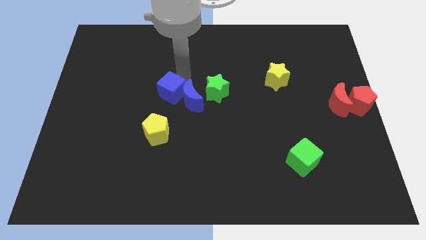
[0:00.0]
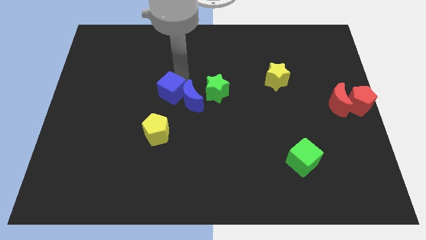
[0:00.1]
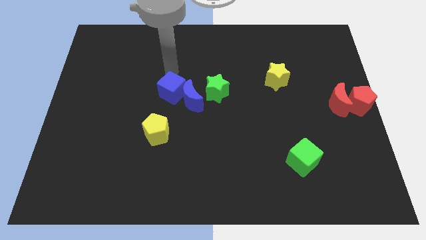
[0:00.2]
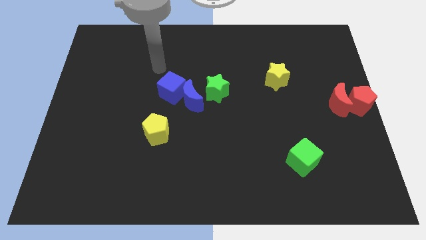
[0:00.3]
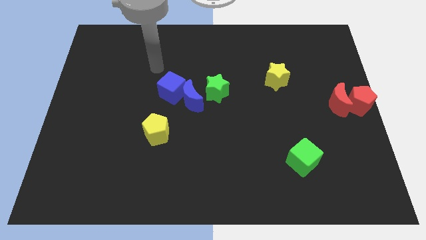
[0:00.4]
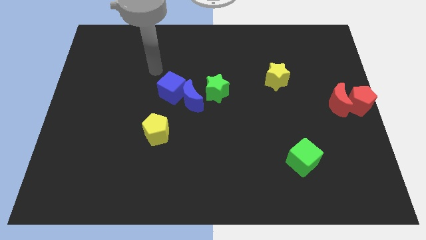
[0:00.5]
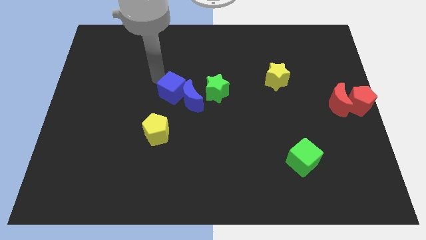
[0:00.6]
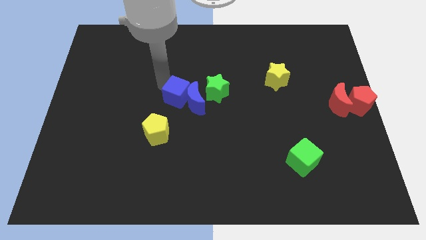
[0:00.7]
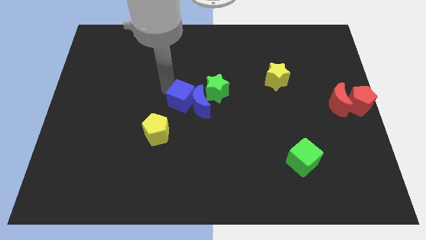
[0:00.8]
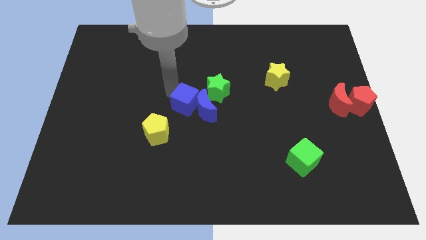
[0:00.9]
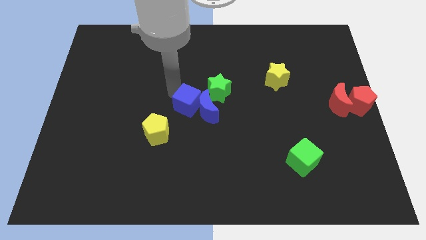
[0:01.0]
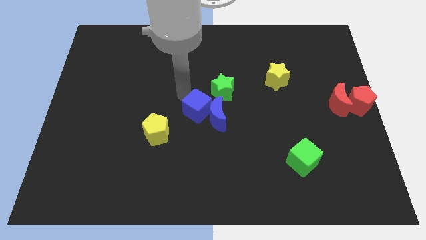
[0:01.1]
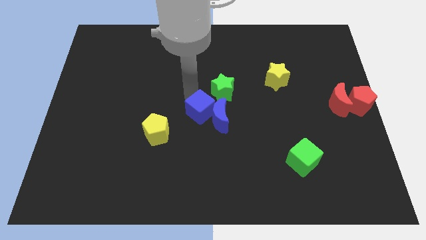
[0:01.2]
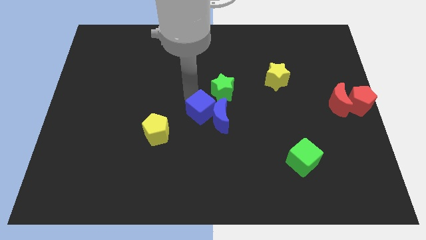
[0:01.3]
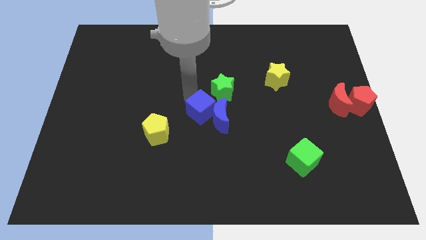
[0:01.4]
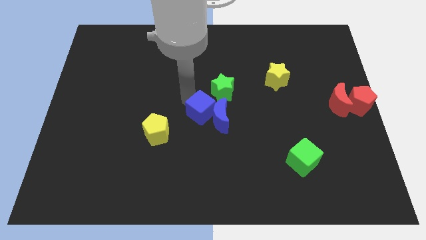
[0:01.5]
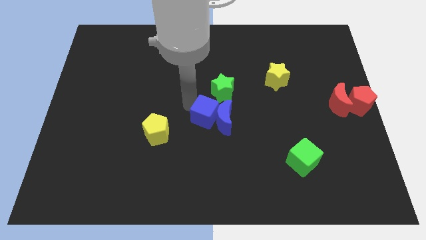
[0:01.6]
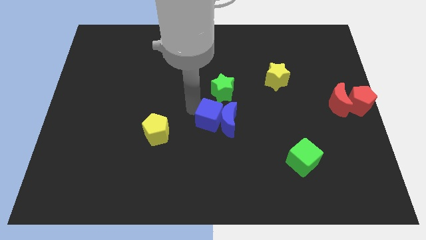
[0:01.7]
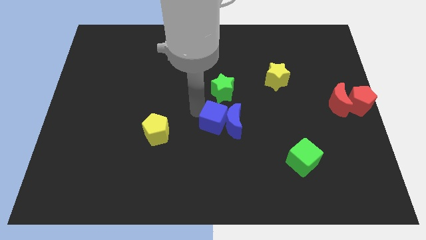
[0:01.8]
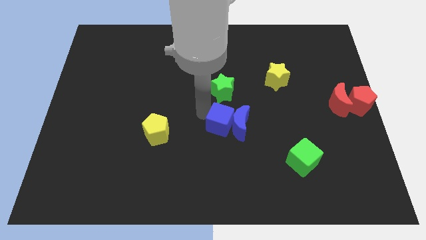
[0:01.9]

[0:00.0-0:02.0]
push blue cube below green star

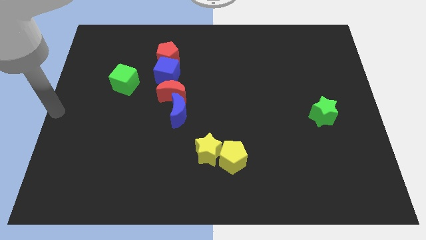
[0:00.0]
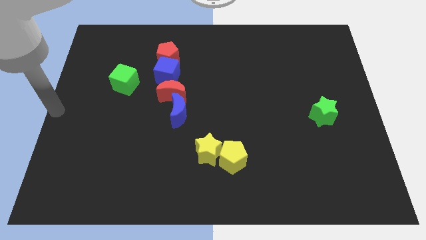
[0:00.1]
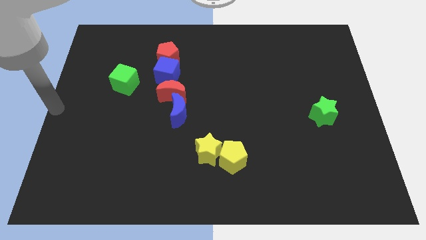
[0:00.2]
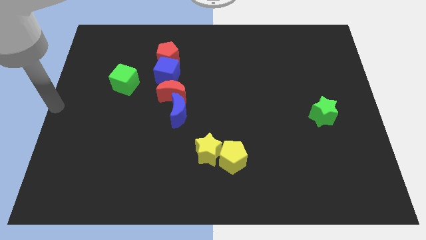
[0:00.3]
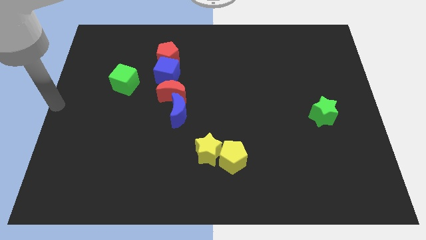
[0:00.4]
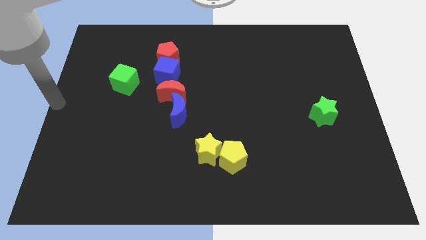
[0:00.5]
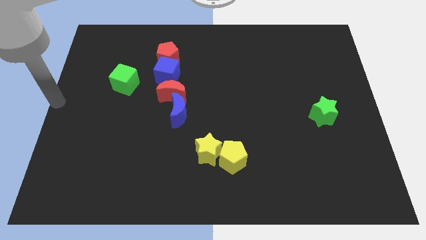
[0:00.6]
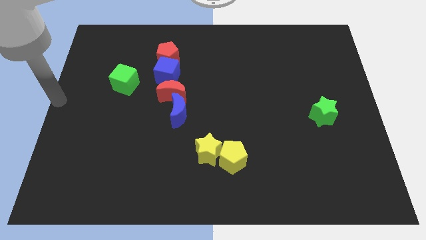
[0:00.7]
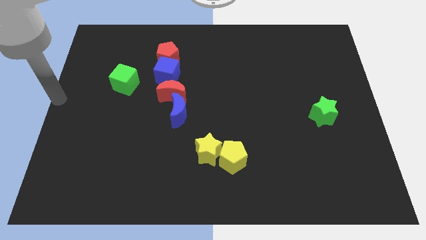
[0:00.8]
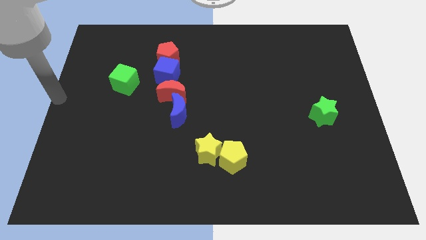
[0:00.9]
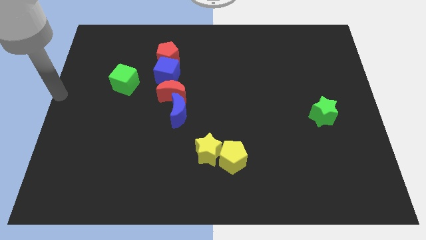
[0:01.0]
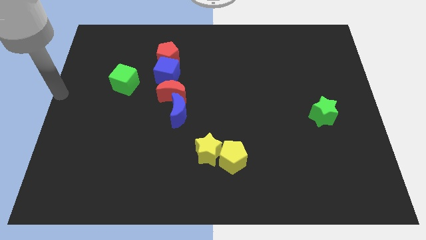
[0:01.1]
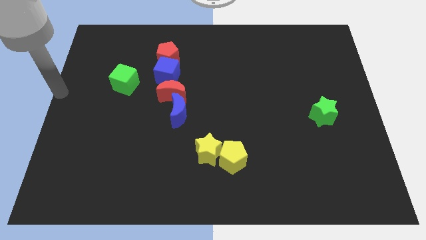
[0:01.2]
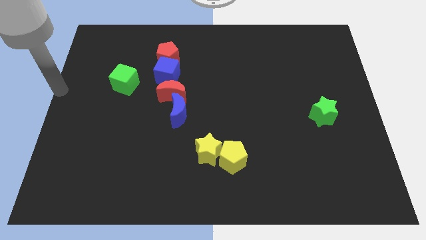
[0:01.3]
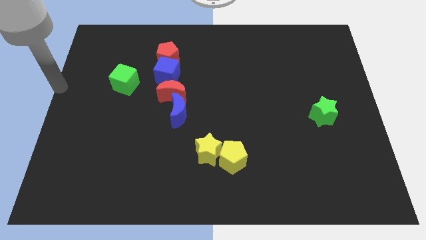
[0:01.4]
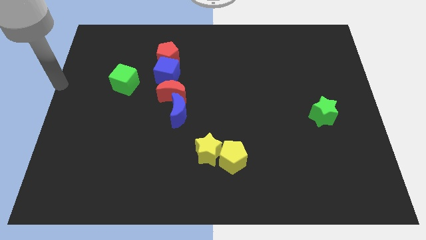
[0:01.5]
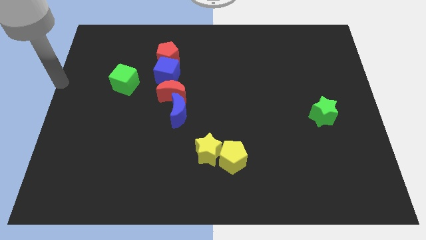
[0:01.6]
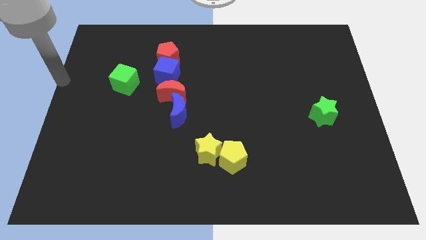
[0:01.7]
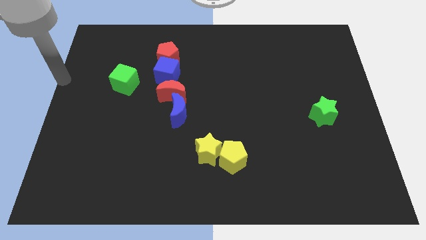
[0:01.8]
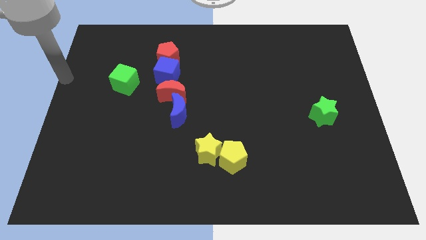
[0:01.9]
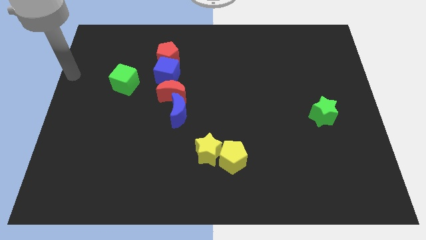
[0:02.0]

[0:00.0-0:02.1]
point the arm to the left of the green cube

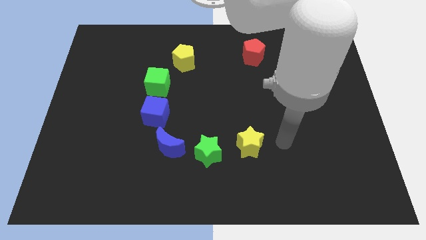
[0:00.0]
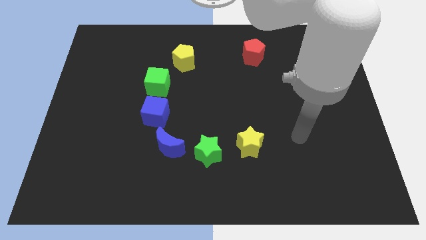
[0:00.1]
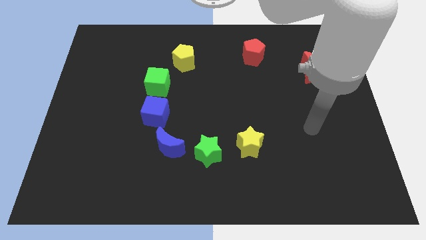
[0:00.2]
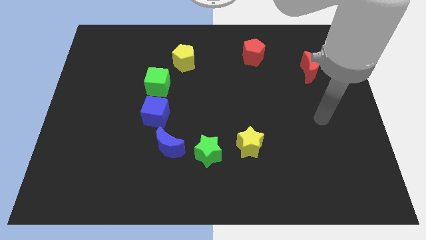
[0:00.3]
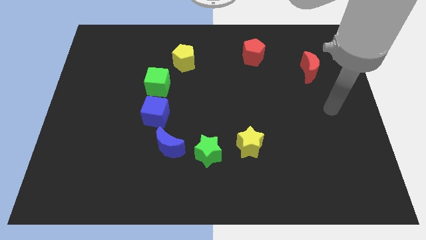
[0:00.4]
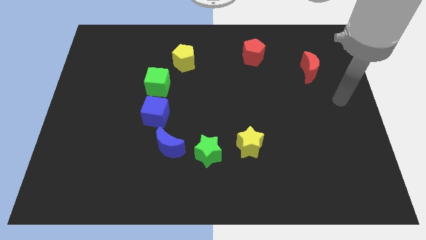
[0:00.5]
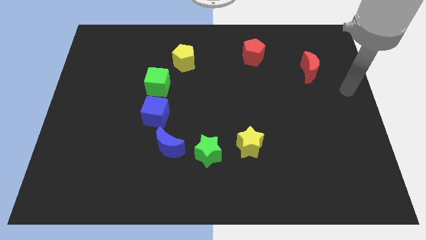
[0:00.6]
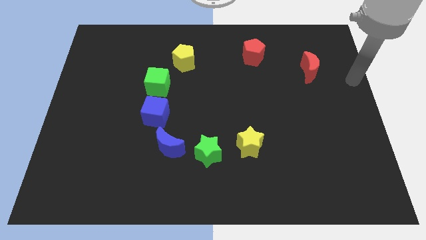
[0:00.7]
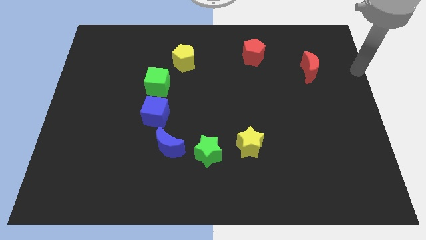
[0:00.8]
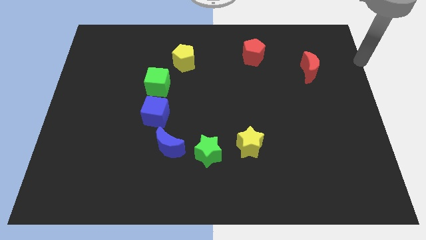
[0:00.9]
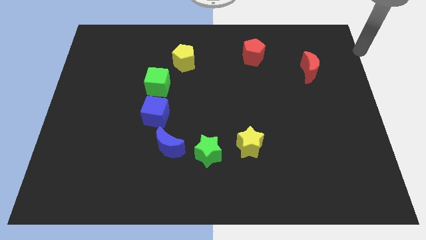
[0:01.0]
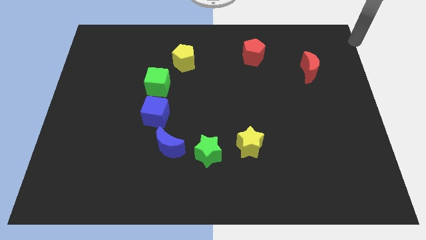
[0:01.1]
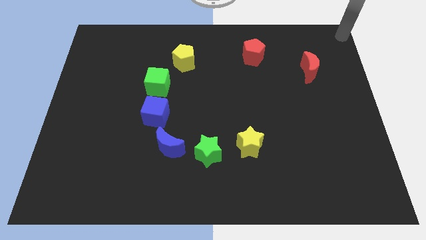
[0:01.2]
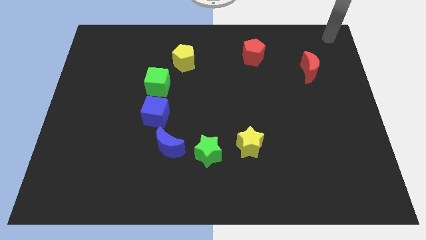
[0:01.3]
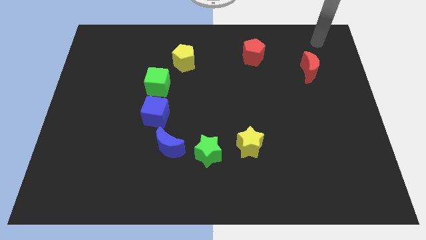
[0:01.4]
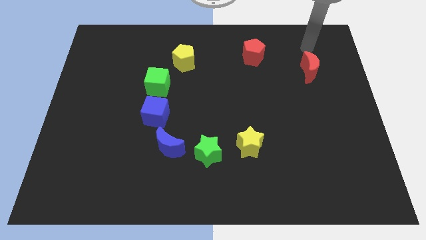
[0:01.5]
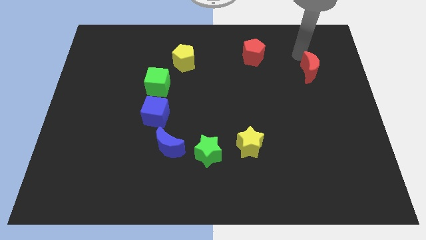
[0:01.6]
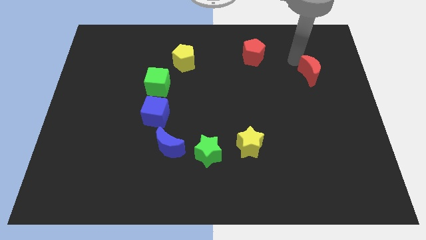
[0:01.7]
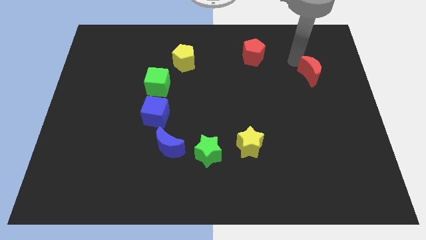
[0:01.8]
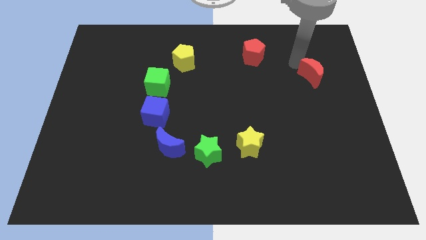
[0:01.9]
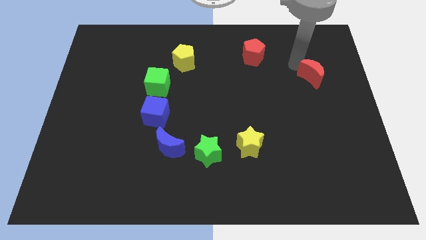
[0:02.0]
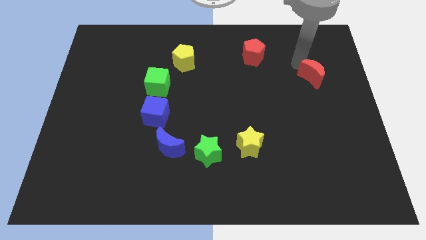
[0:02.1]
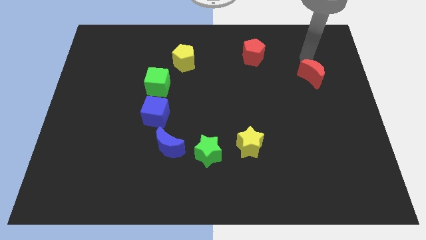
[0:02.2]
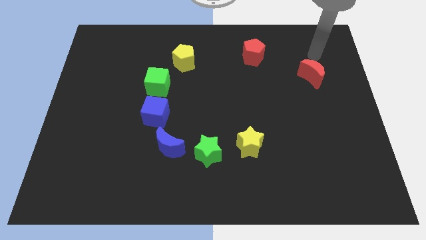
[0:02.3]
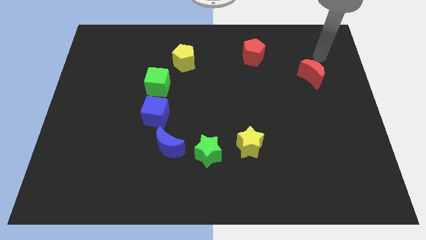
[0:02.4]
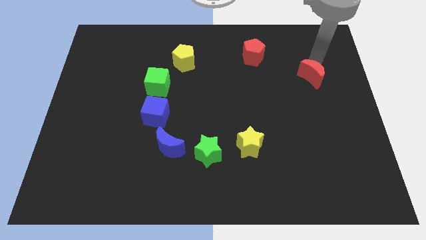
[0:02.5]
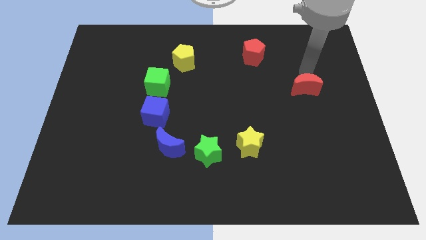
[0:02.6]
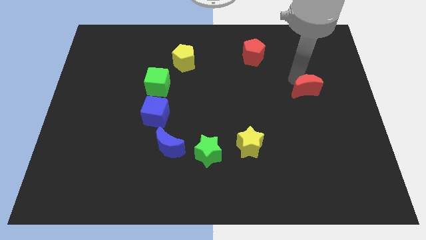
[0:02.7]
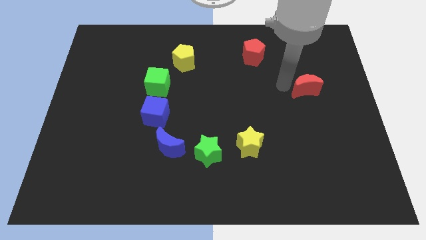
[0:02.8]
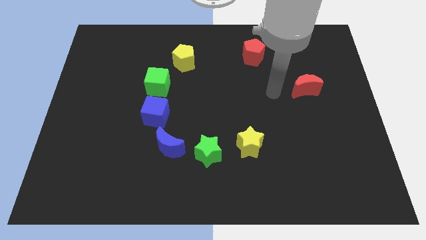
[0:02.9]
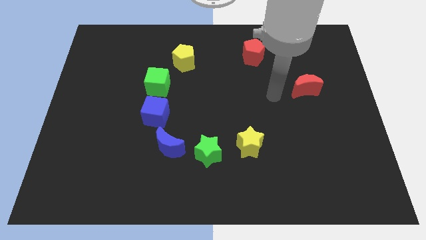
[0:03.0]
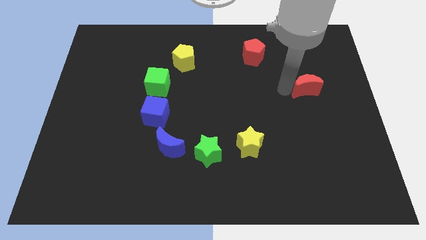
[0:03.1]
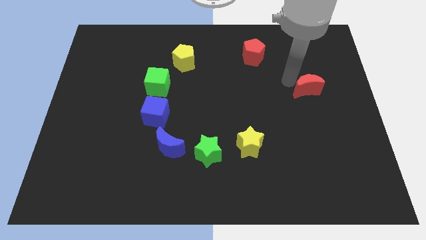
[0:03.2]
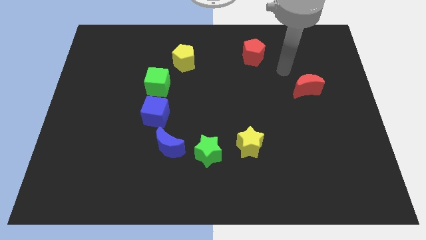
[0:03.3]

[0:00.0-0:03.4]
place your arm diagonal to red moon

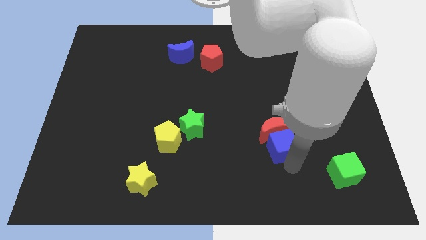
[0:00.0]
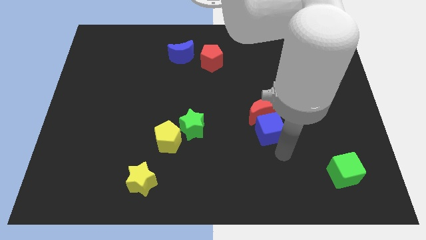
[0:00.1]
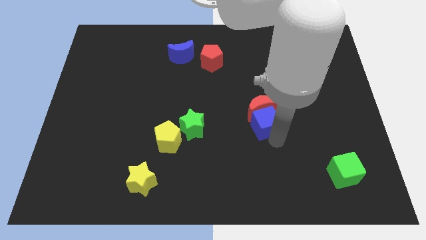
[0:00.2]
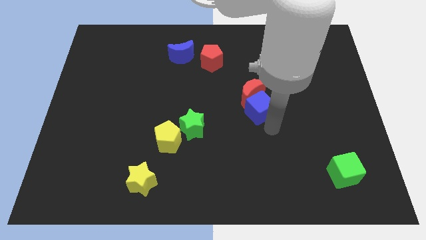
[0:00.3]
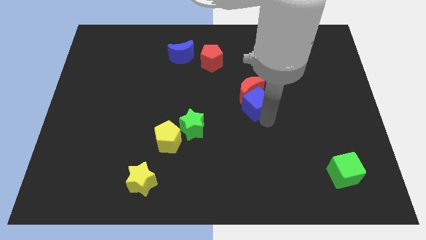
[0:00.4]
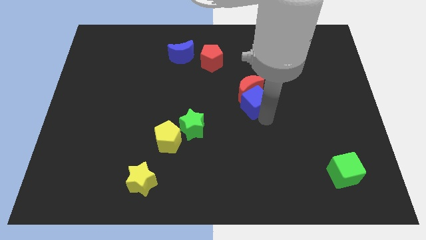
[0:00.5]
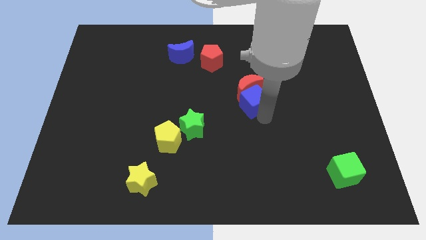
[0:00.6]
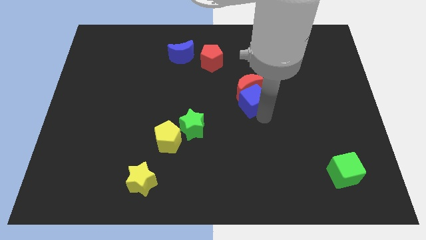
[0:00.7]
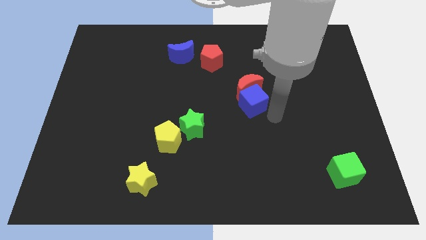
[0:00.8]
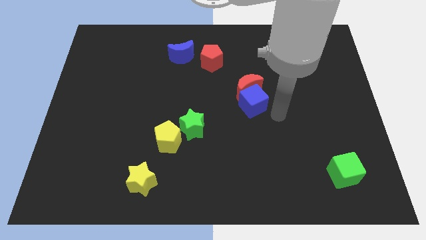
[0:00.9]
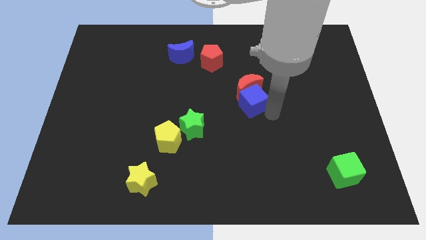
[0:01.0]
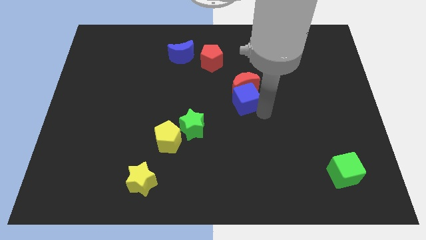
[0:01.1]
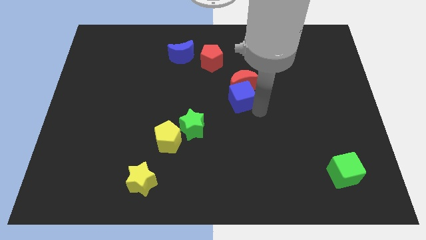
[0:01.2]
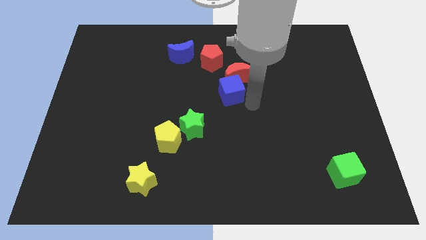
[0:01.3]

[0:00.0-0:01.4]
push the red moon with the blue cube
